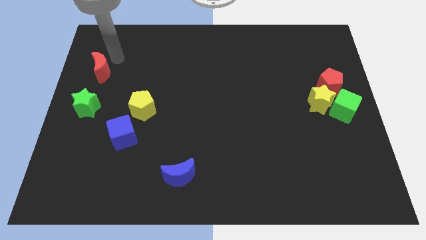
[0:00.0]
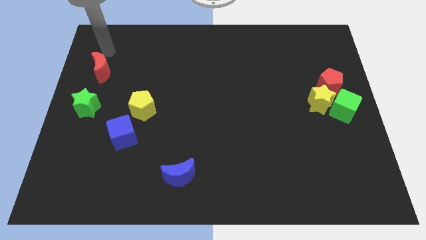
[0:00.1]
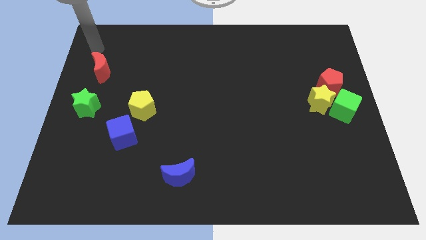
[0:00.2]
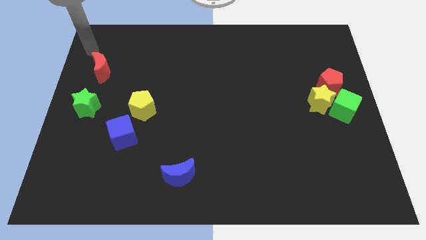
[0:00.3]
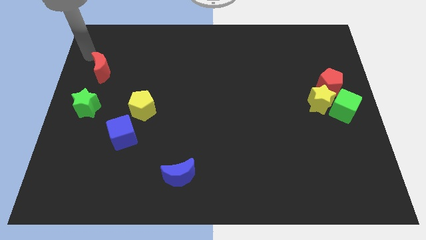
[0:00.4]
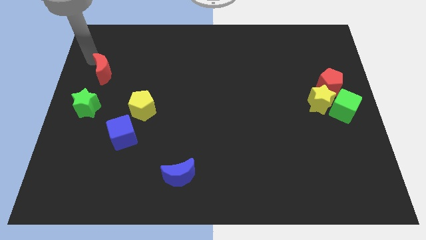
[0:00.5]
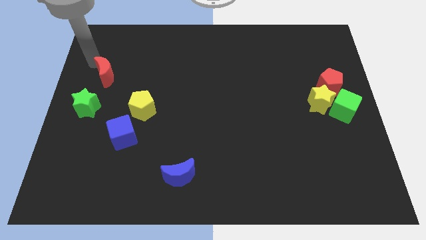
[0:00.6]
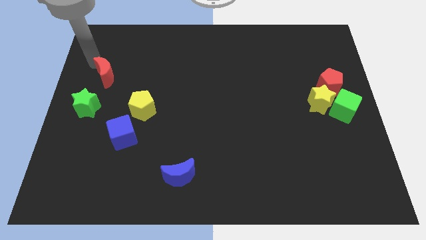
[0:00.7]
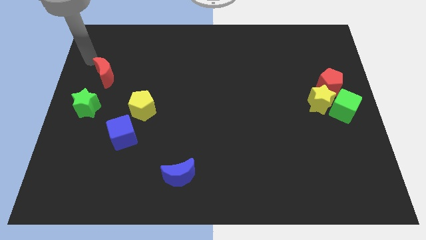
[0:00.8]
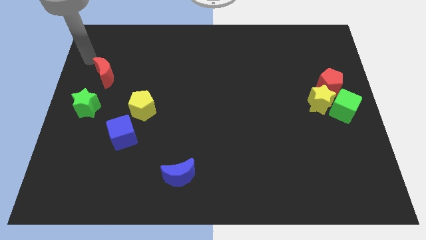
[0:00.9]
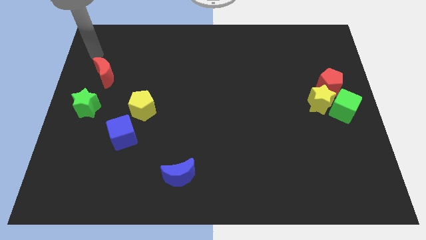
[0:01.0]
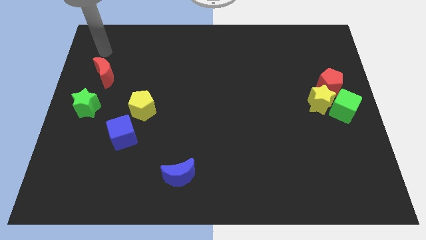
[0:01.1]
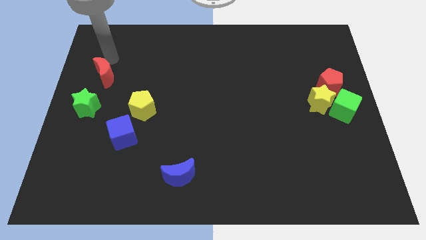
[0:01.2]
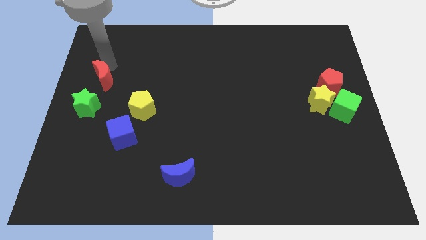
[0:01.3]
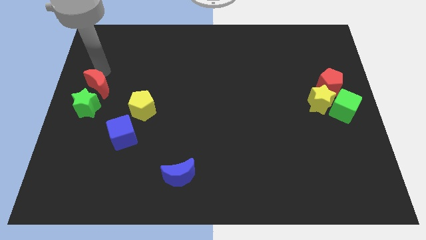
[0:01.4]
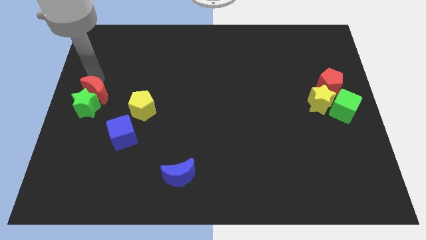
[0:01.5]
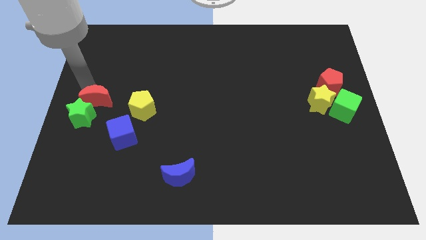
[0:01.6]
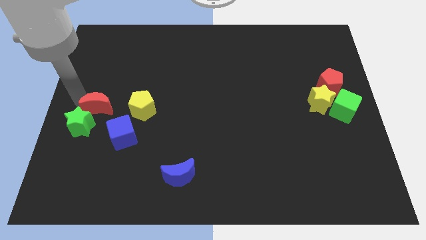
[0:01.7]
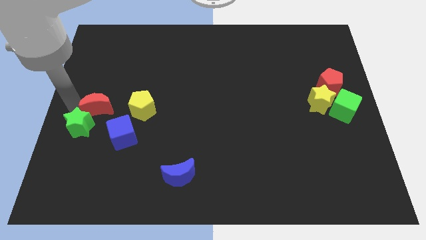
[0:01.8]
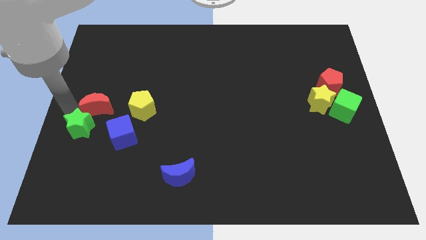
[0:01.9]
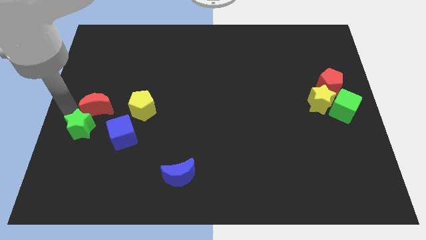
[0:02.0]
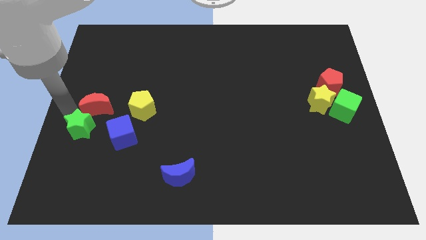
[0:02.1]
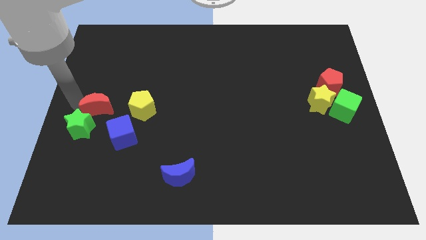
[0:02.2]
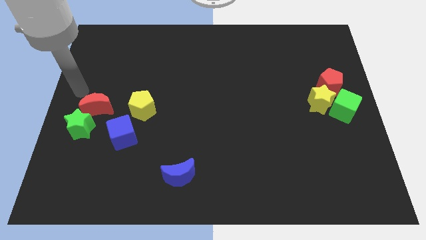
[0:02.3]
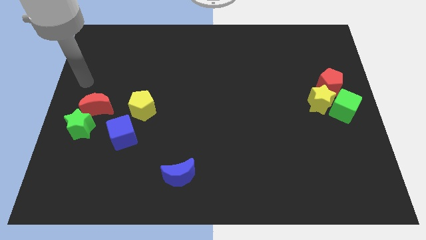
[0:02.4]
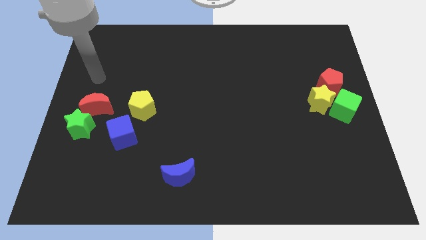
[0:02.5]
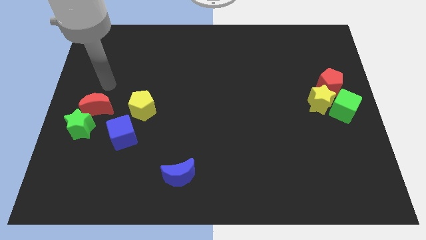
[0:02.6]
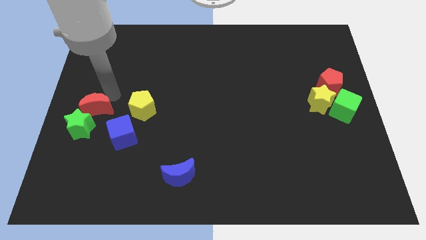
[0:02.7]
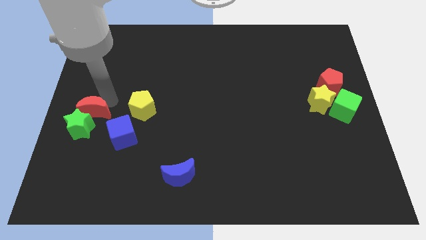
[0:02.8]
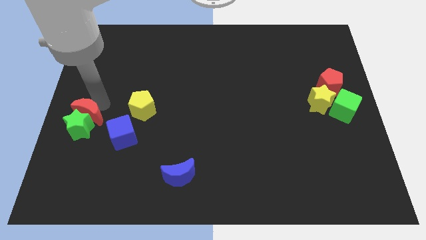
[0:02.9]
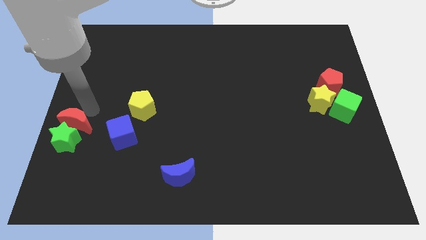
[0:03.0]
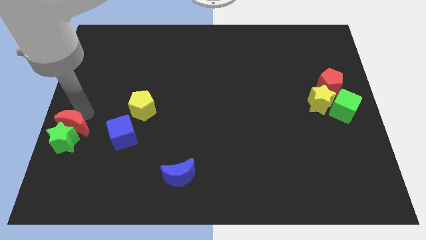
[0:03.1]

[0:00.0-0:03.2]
push the red moon into the green star

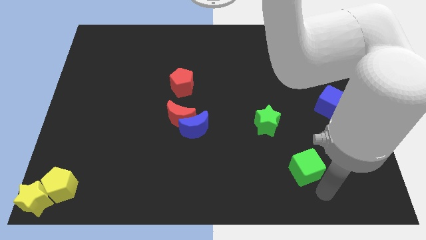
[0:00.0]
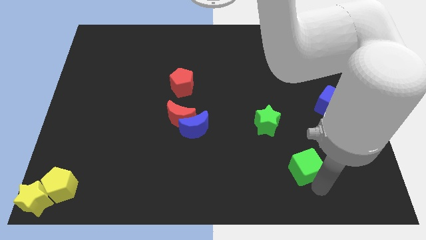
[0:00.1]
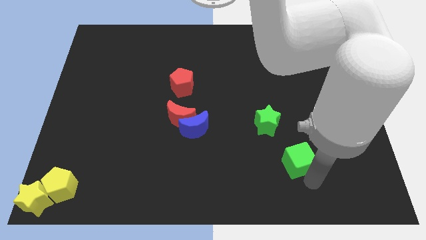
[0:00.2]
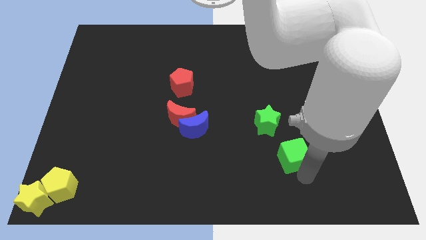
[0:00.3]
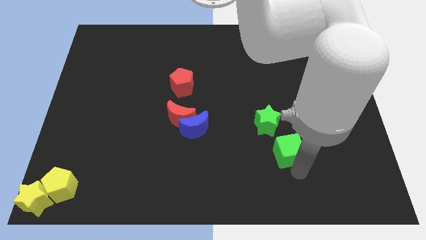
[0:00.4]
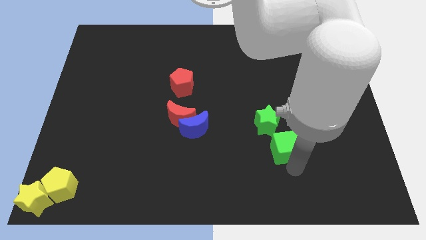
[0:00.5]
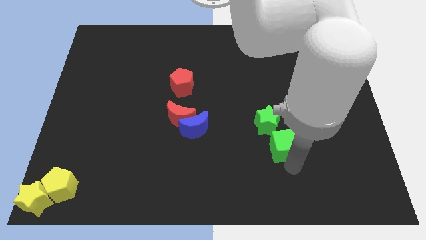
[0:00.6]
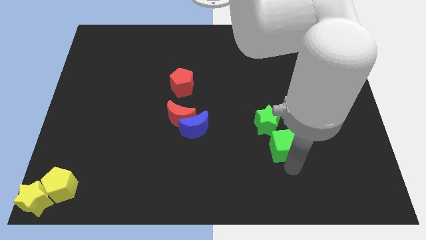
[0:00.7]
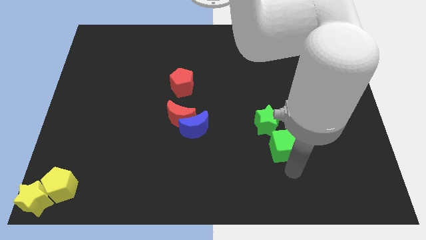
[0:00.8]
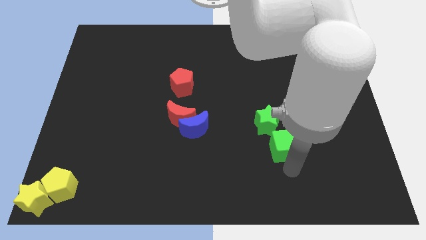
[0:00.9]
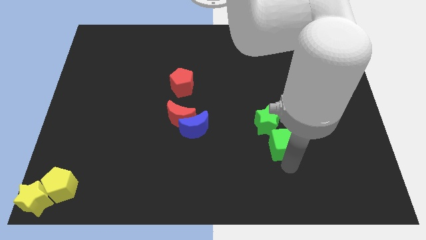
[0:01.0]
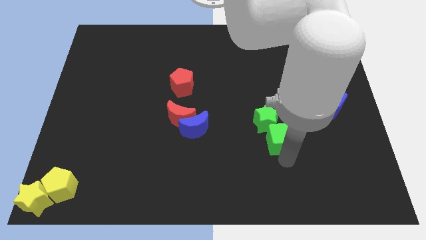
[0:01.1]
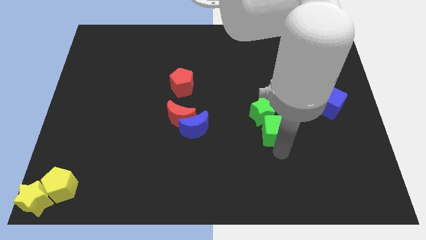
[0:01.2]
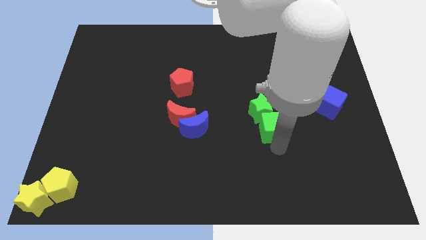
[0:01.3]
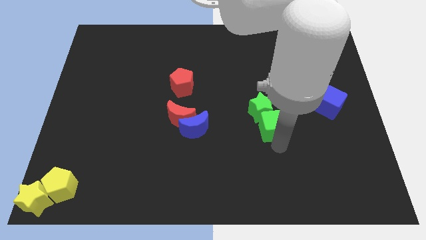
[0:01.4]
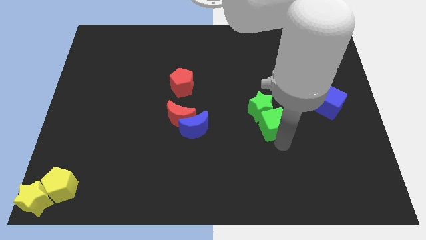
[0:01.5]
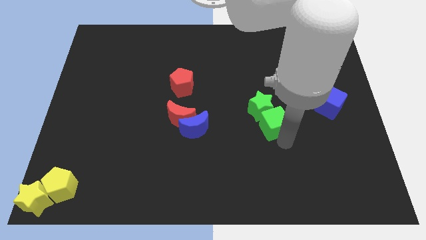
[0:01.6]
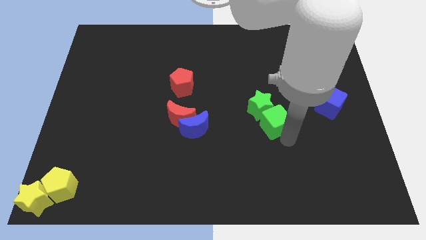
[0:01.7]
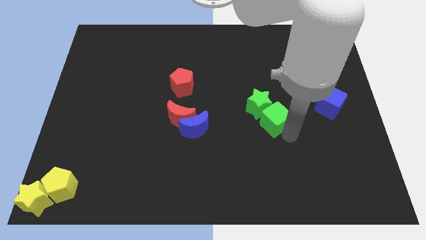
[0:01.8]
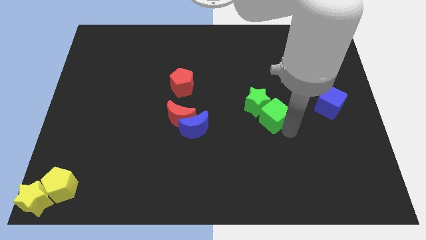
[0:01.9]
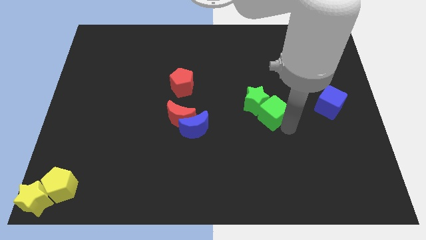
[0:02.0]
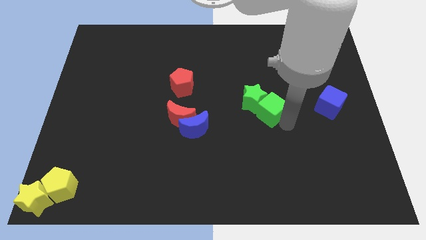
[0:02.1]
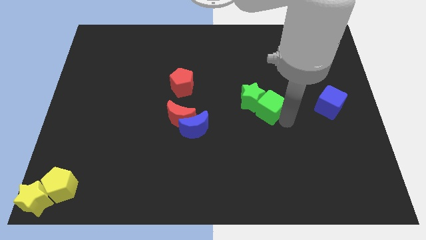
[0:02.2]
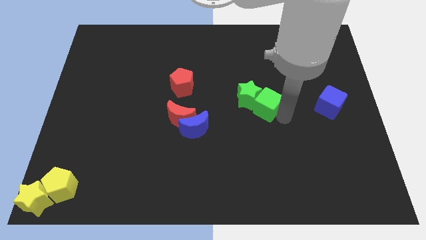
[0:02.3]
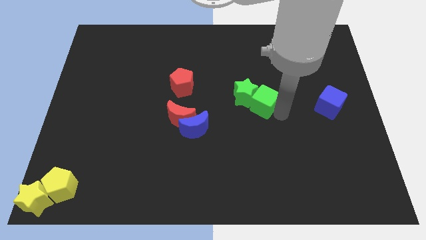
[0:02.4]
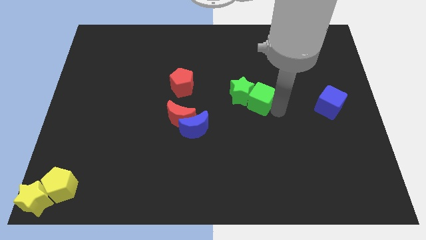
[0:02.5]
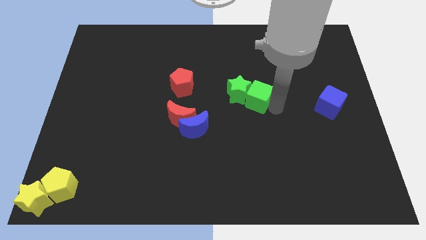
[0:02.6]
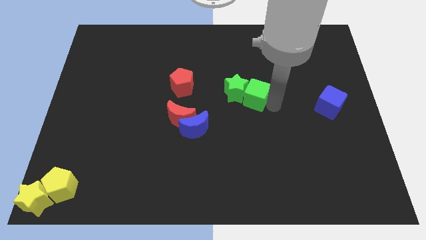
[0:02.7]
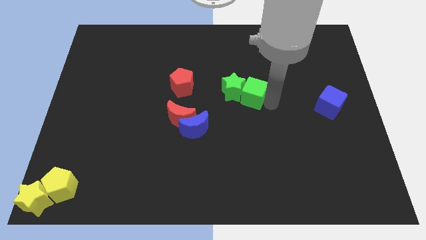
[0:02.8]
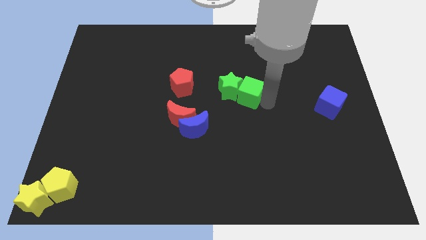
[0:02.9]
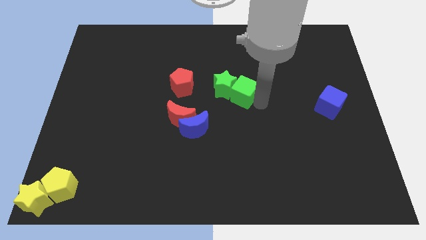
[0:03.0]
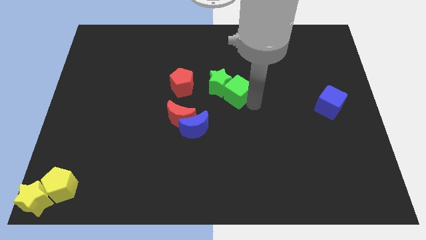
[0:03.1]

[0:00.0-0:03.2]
push the green cube along with green star to the canter of the board

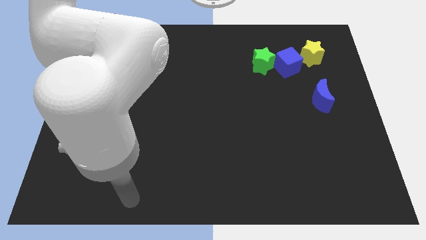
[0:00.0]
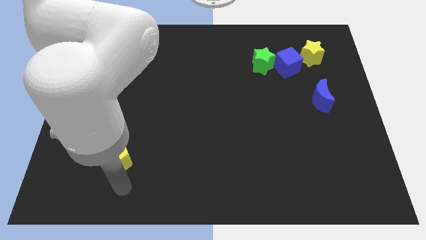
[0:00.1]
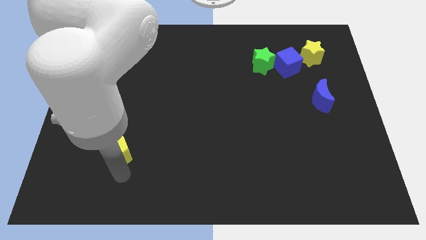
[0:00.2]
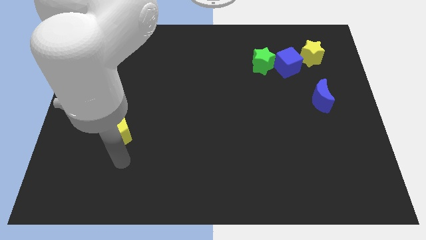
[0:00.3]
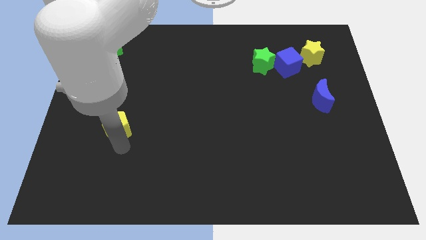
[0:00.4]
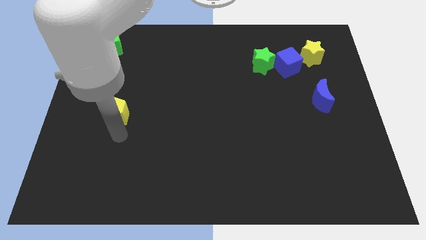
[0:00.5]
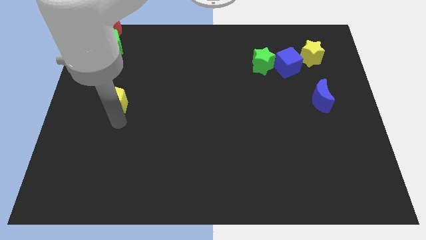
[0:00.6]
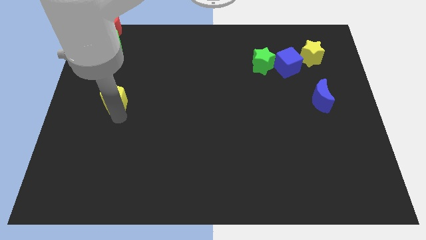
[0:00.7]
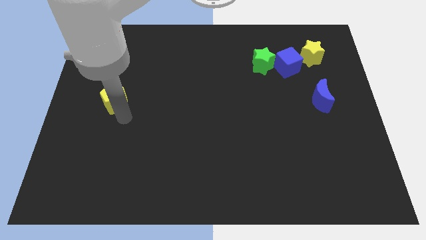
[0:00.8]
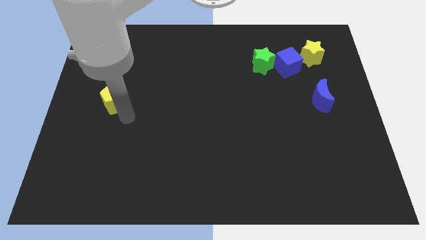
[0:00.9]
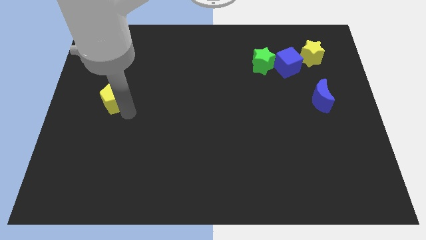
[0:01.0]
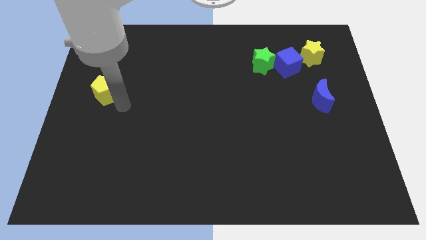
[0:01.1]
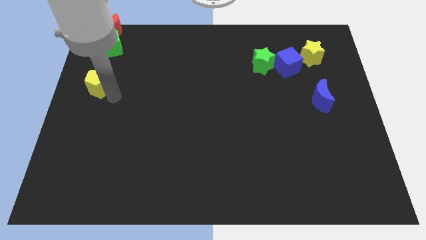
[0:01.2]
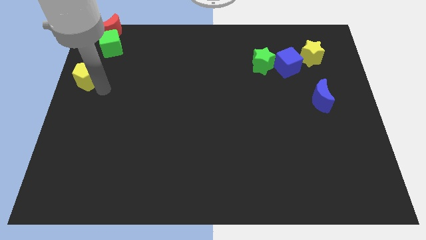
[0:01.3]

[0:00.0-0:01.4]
move yellow pentagon horizontally

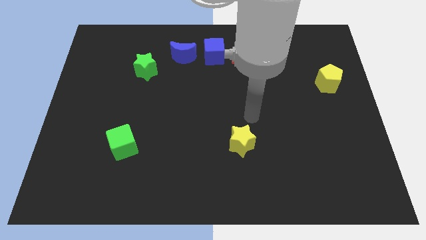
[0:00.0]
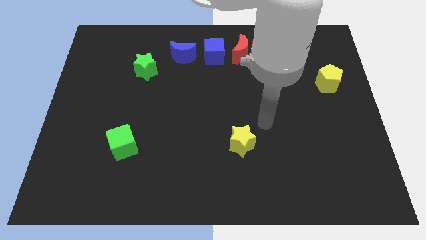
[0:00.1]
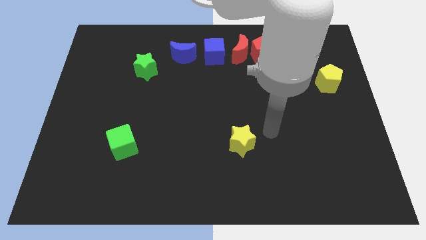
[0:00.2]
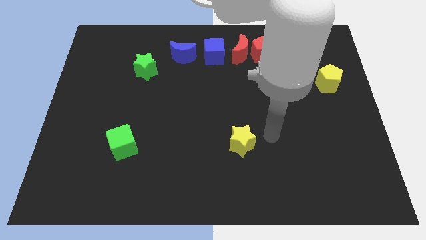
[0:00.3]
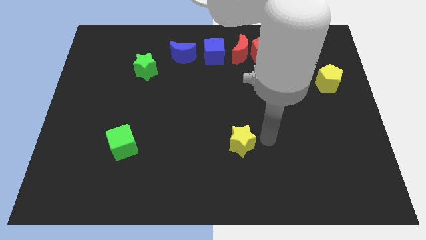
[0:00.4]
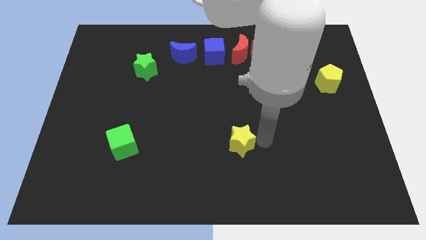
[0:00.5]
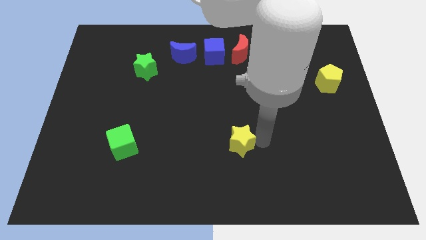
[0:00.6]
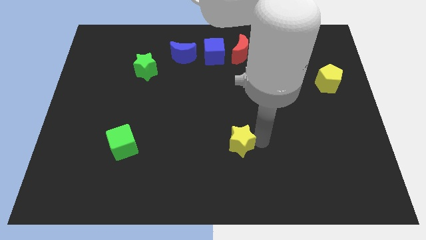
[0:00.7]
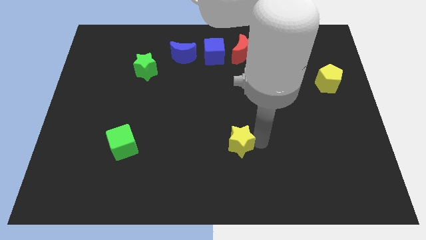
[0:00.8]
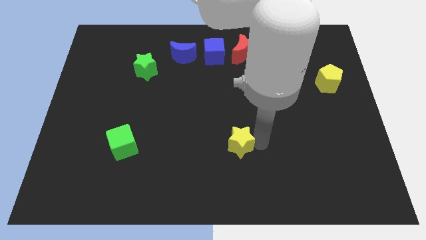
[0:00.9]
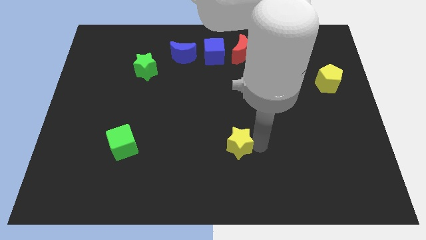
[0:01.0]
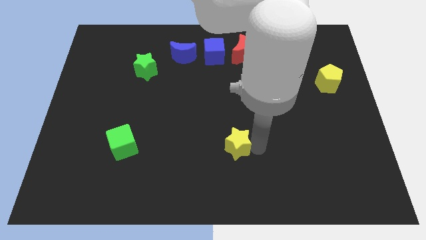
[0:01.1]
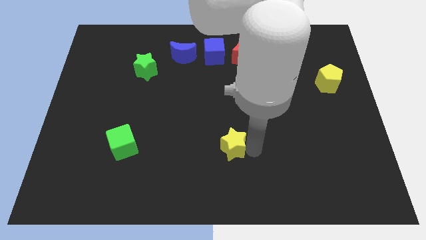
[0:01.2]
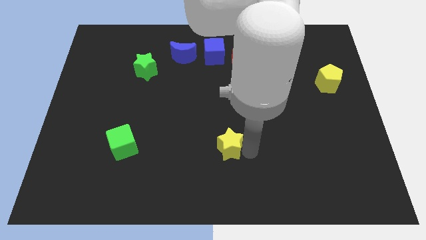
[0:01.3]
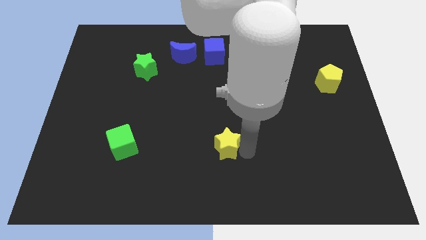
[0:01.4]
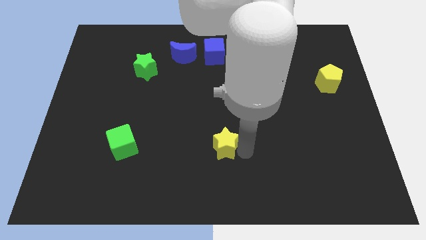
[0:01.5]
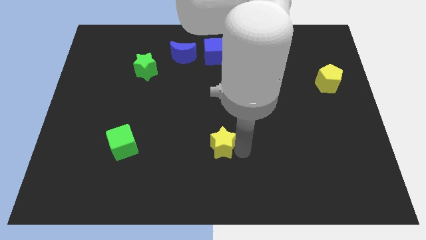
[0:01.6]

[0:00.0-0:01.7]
move the yellow star slightly to the left
